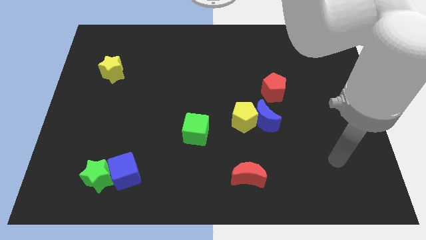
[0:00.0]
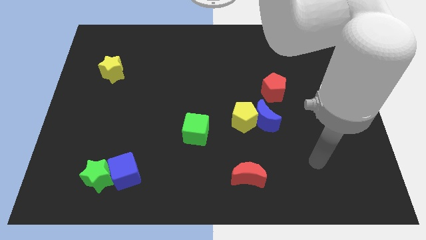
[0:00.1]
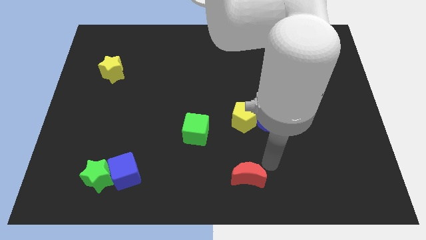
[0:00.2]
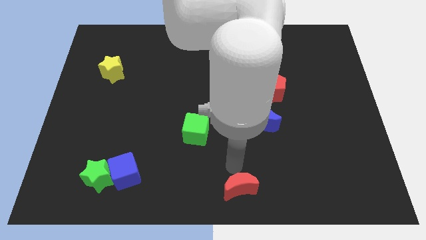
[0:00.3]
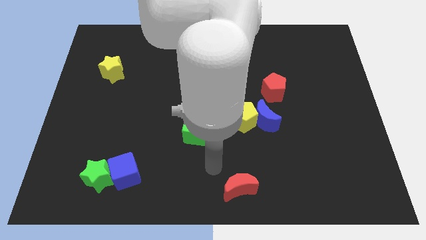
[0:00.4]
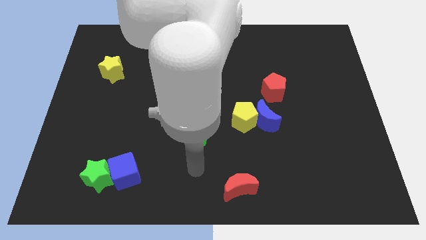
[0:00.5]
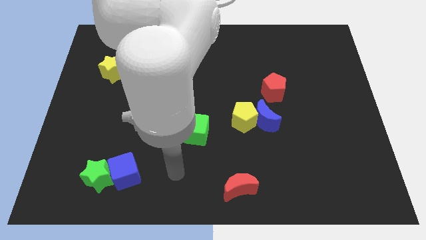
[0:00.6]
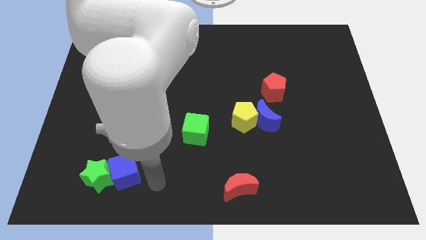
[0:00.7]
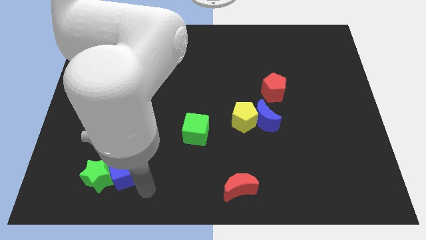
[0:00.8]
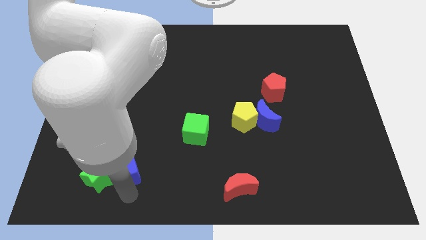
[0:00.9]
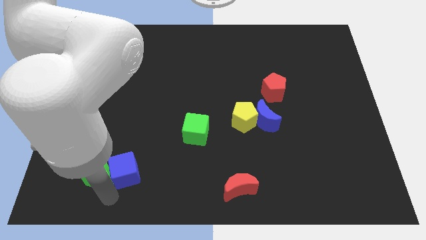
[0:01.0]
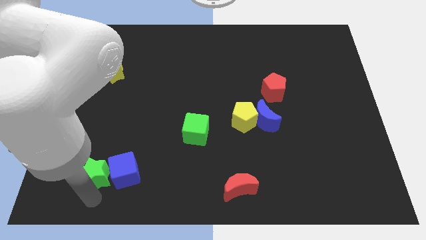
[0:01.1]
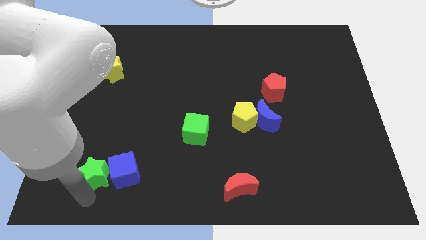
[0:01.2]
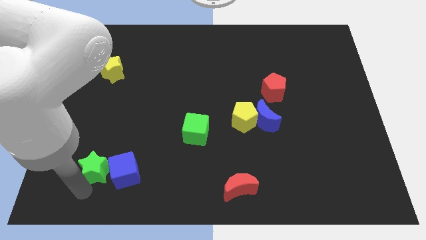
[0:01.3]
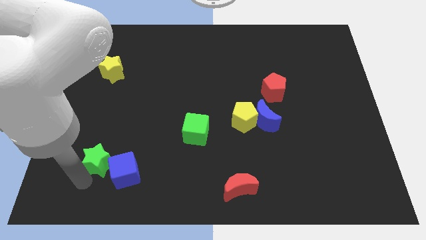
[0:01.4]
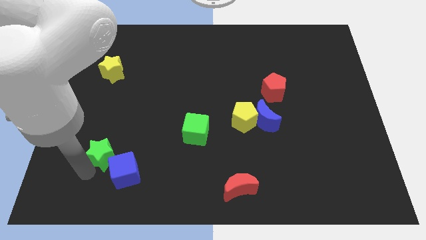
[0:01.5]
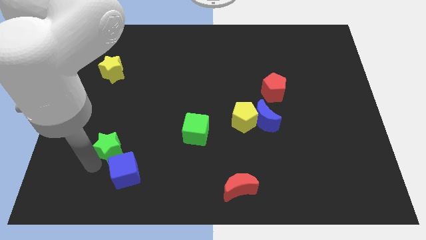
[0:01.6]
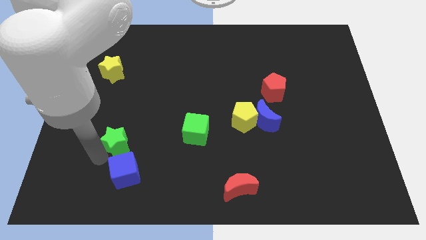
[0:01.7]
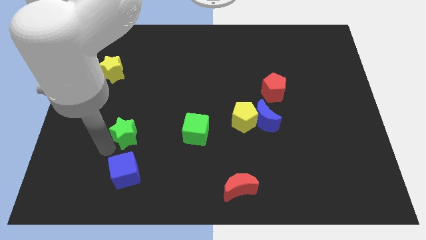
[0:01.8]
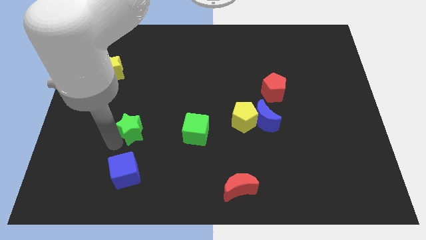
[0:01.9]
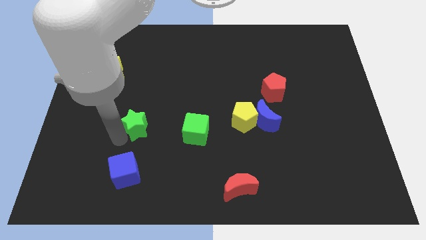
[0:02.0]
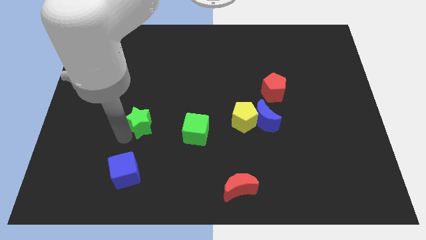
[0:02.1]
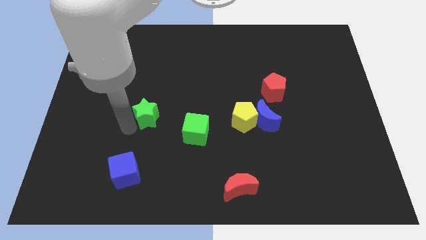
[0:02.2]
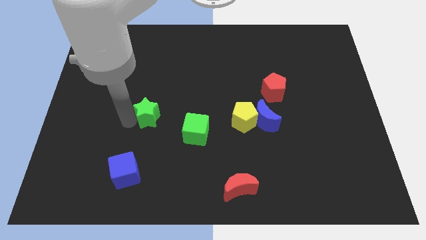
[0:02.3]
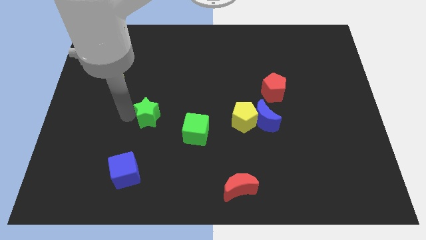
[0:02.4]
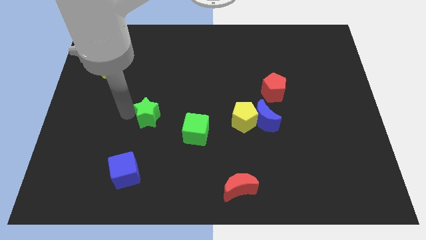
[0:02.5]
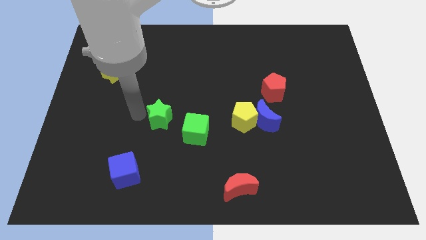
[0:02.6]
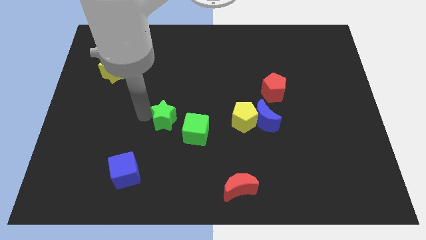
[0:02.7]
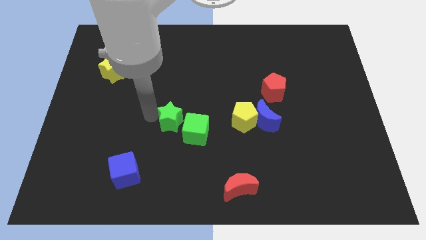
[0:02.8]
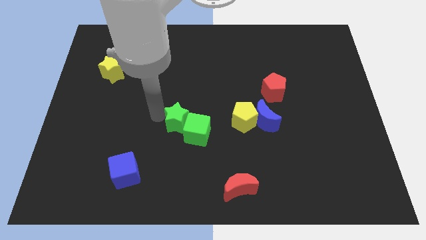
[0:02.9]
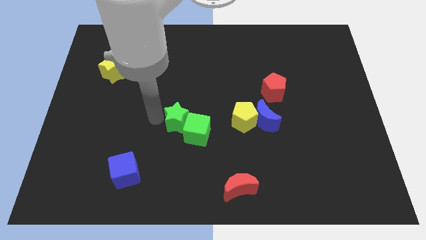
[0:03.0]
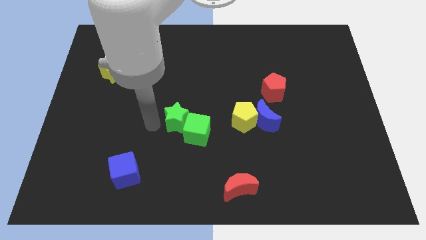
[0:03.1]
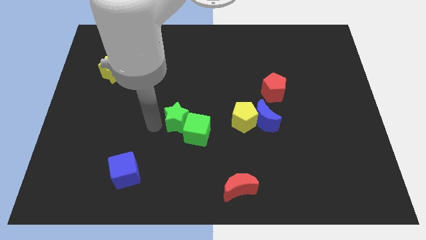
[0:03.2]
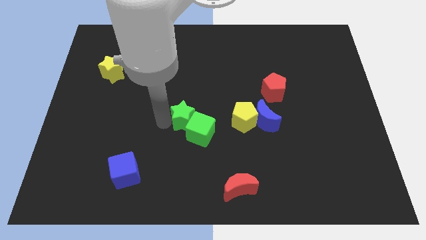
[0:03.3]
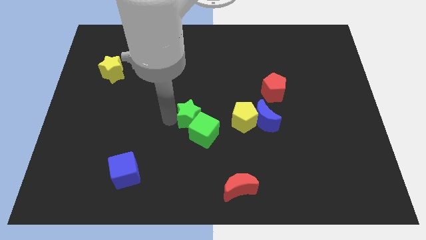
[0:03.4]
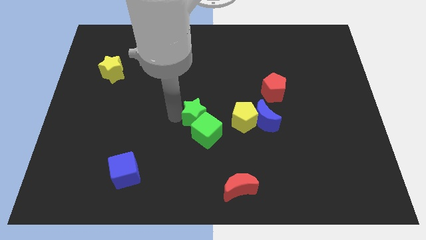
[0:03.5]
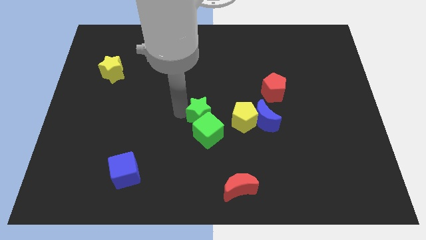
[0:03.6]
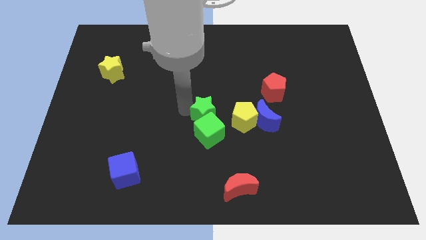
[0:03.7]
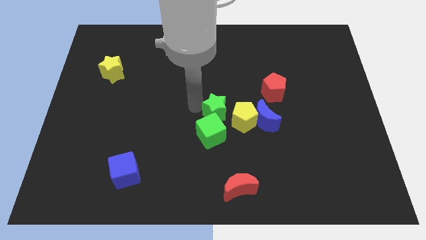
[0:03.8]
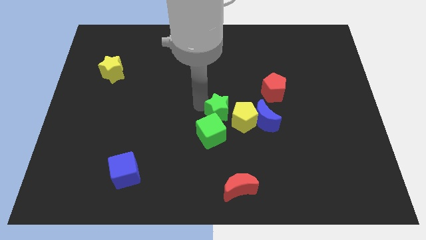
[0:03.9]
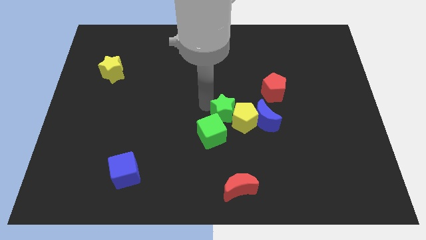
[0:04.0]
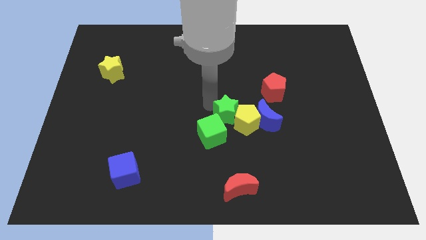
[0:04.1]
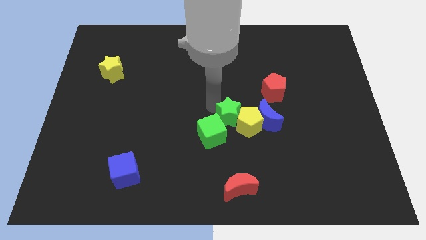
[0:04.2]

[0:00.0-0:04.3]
put the green star close to the yellow pentagon

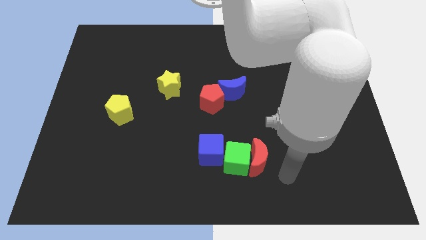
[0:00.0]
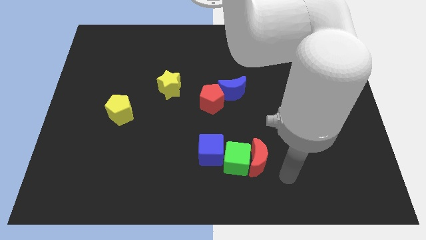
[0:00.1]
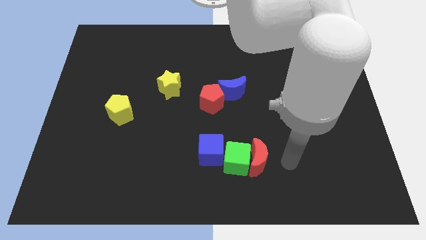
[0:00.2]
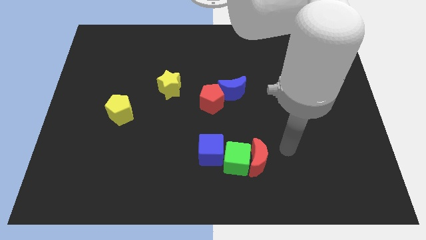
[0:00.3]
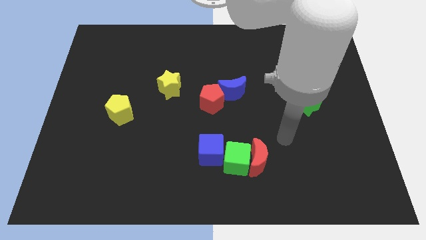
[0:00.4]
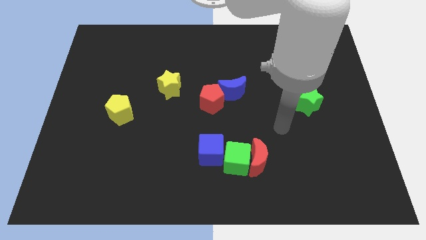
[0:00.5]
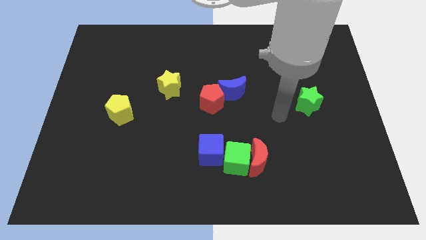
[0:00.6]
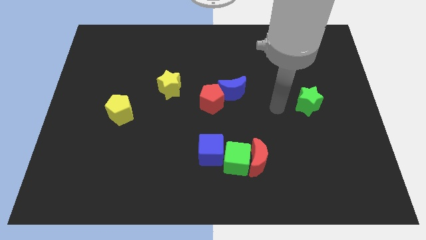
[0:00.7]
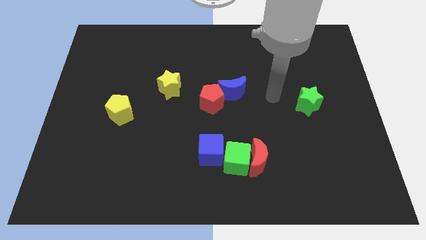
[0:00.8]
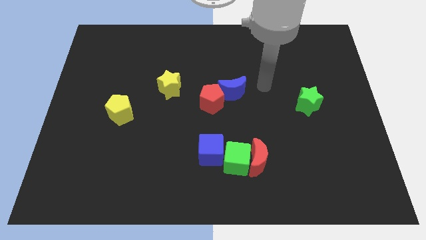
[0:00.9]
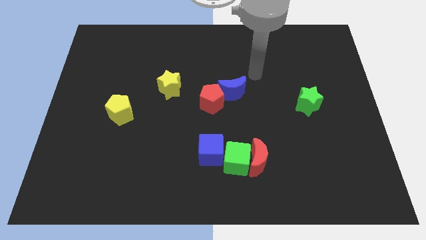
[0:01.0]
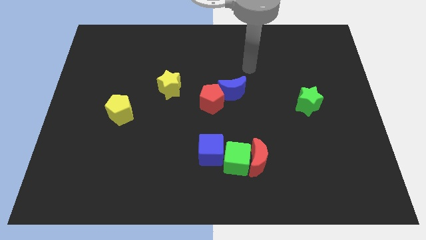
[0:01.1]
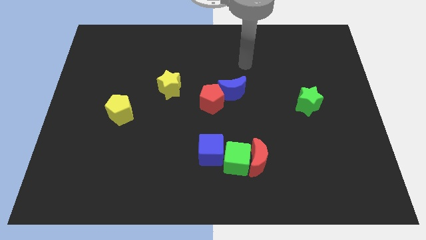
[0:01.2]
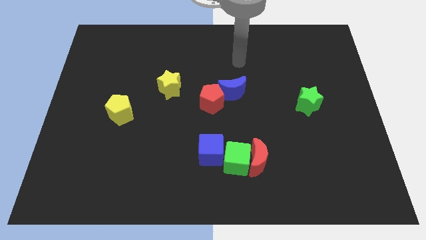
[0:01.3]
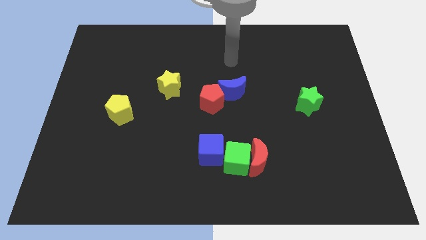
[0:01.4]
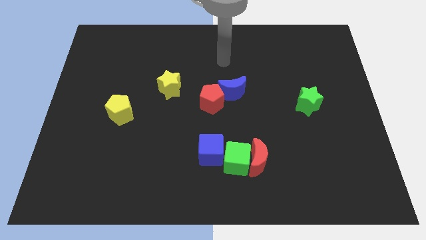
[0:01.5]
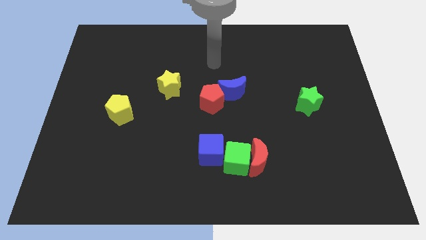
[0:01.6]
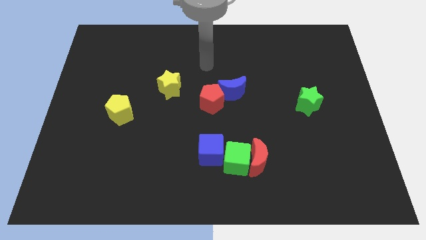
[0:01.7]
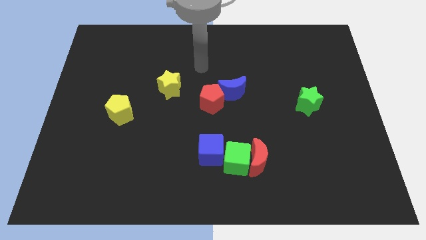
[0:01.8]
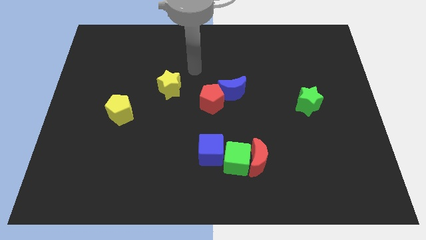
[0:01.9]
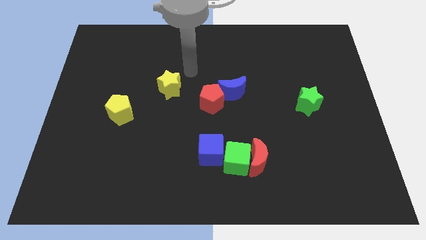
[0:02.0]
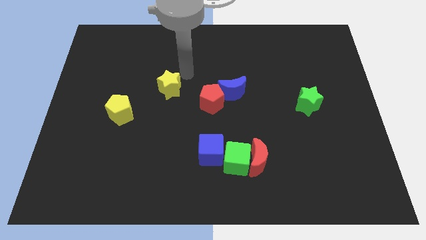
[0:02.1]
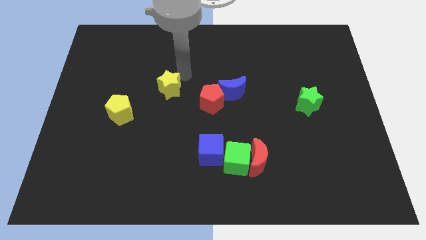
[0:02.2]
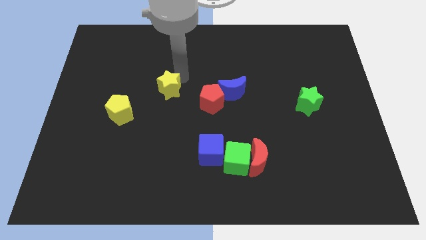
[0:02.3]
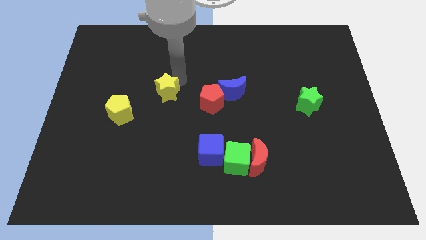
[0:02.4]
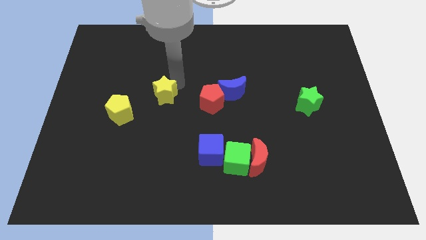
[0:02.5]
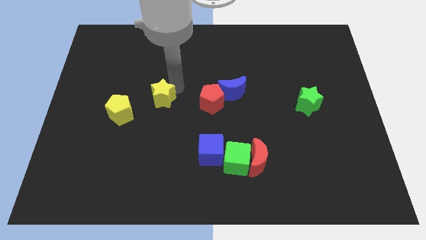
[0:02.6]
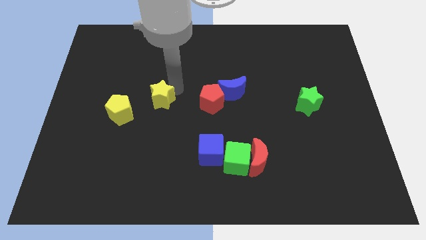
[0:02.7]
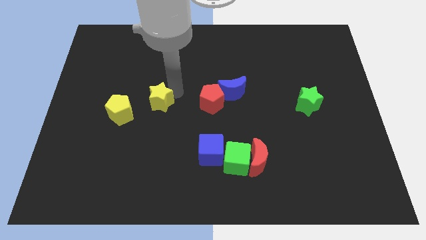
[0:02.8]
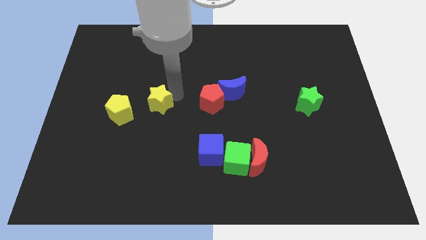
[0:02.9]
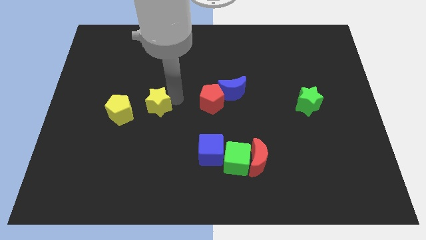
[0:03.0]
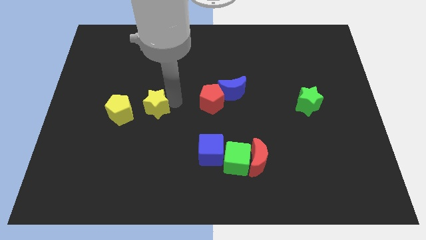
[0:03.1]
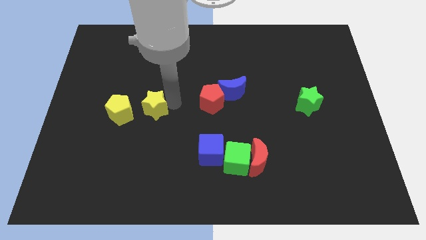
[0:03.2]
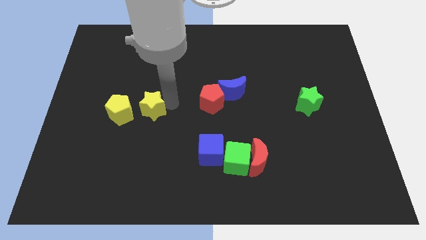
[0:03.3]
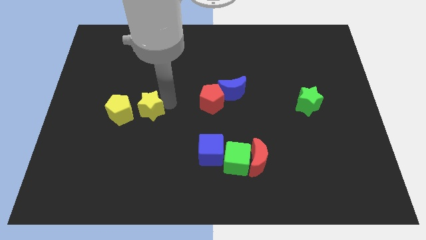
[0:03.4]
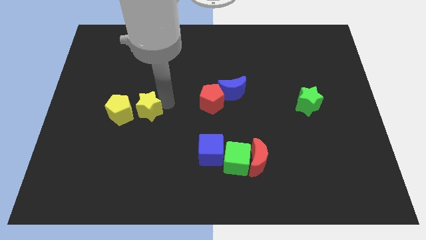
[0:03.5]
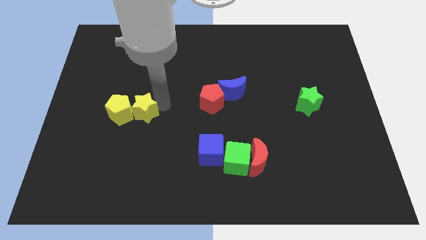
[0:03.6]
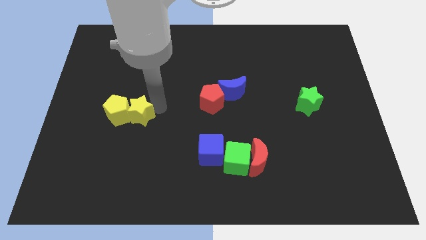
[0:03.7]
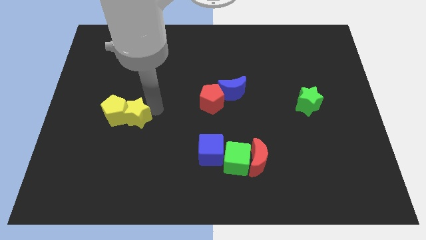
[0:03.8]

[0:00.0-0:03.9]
slide the yellow star next to the yellow pentagon
